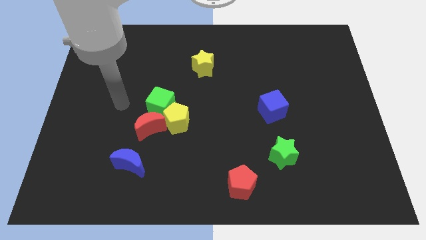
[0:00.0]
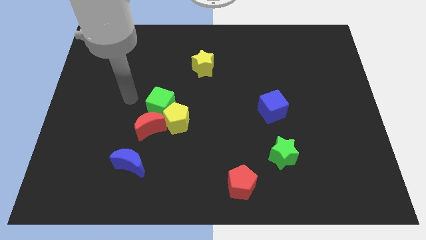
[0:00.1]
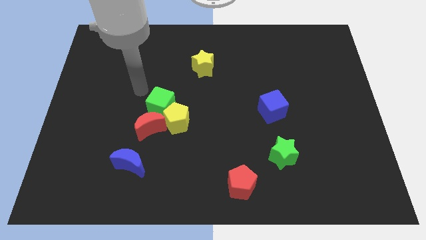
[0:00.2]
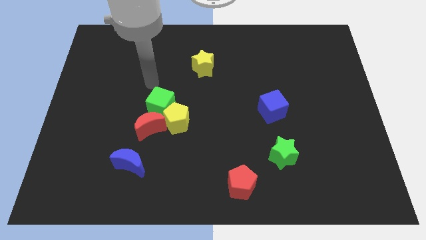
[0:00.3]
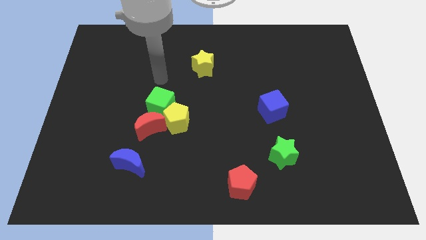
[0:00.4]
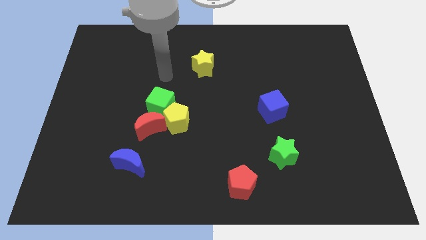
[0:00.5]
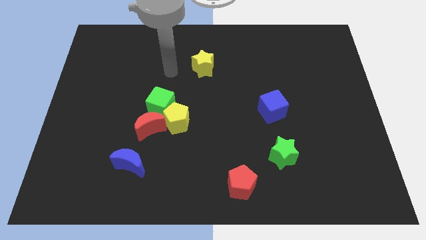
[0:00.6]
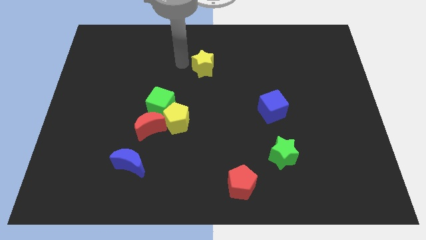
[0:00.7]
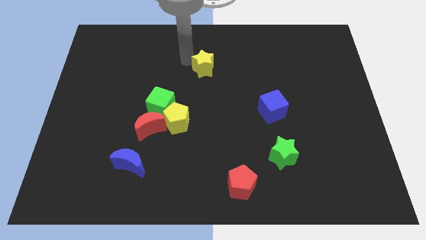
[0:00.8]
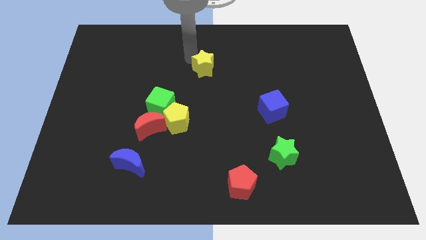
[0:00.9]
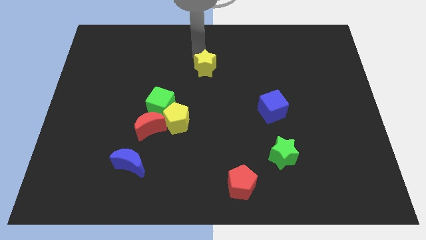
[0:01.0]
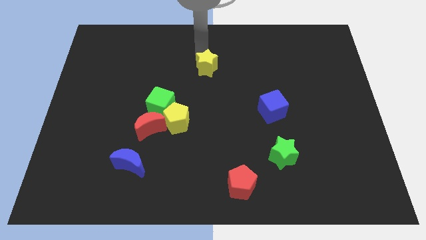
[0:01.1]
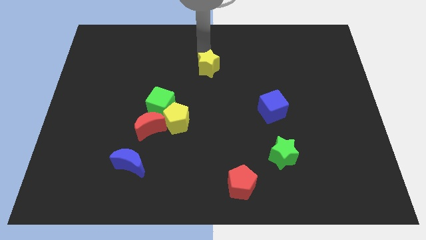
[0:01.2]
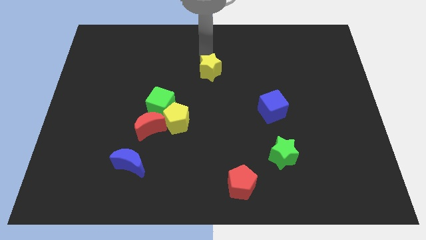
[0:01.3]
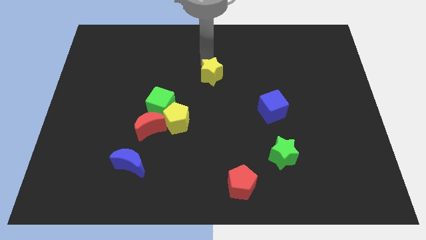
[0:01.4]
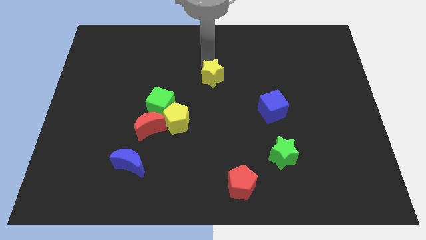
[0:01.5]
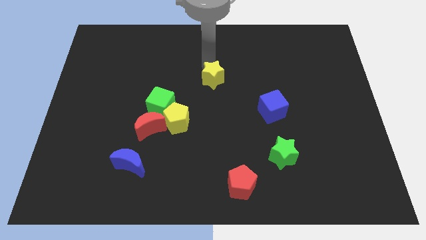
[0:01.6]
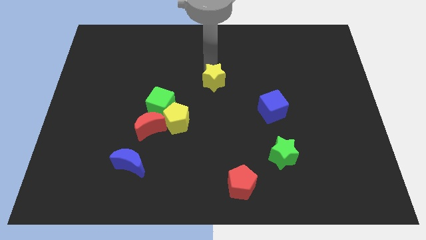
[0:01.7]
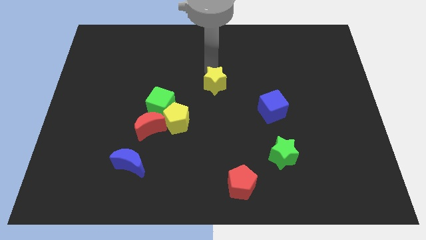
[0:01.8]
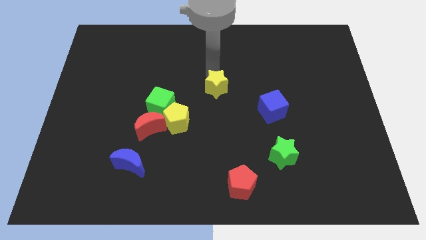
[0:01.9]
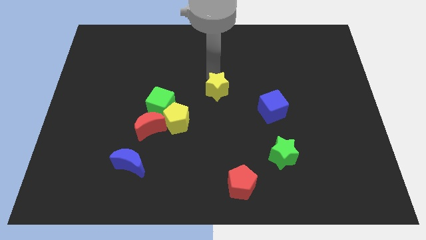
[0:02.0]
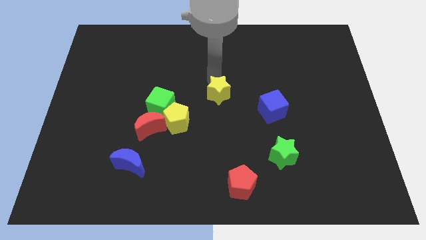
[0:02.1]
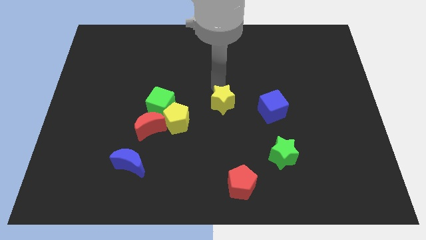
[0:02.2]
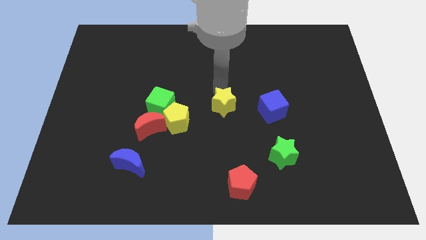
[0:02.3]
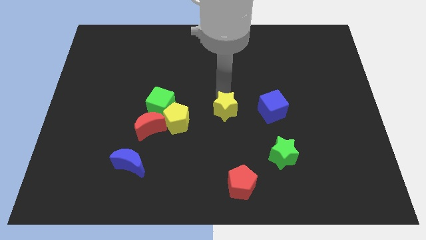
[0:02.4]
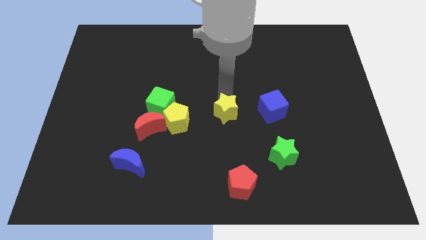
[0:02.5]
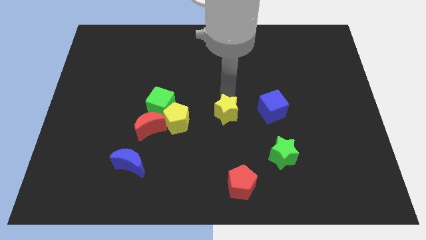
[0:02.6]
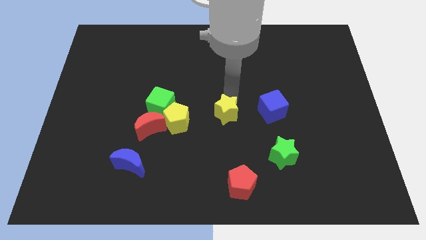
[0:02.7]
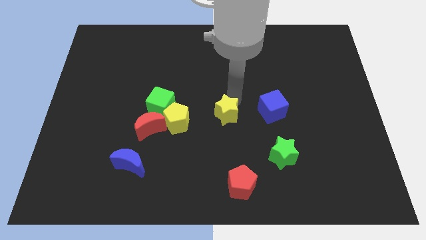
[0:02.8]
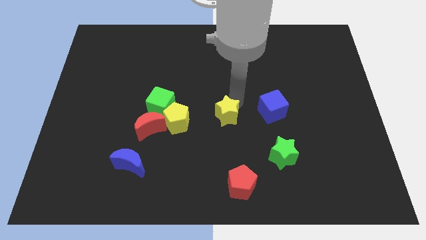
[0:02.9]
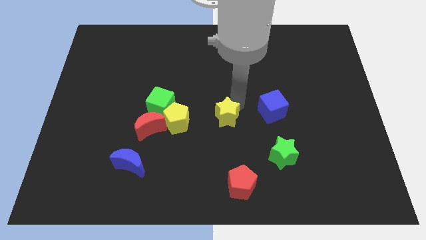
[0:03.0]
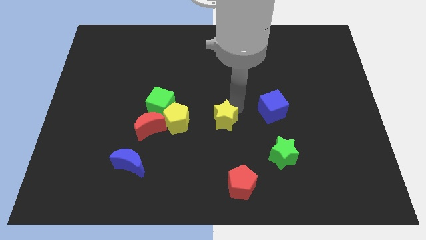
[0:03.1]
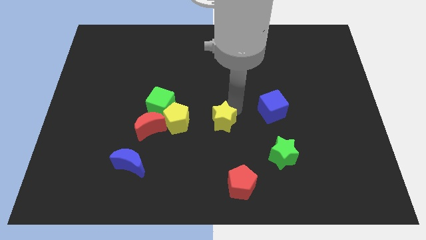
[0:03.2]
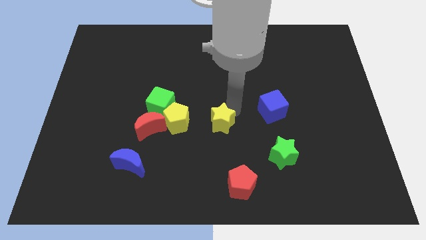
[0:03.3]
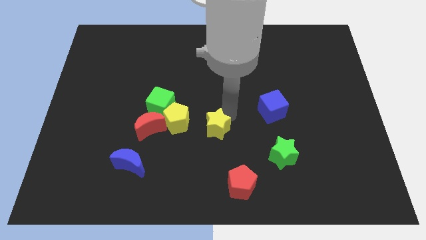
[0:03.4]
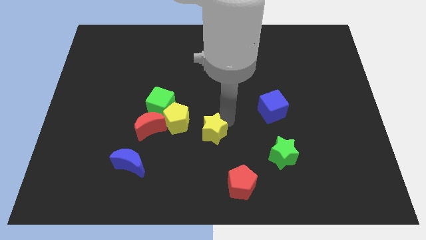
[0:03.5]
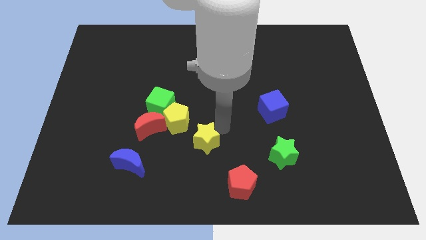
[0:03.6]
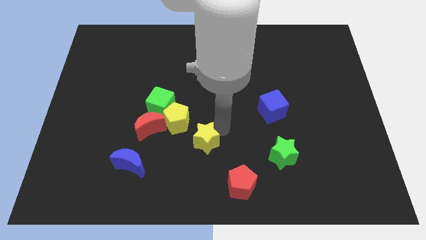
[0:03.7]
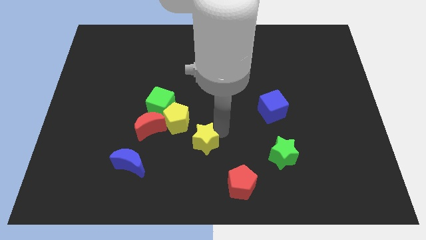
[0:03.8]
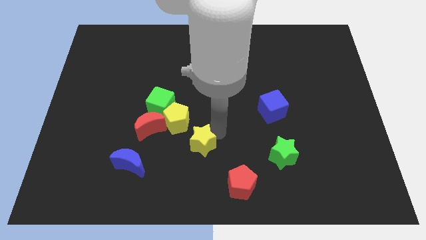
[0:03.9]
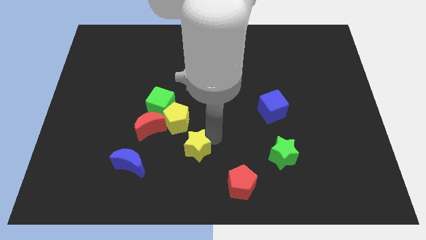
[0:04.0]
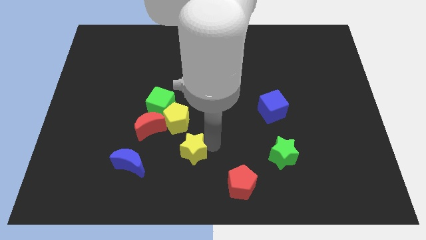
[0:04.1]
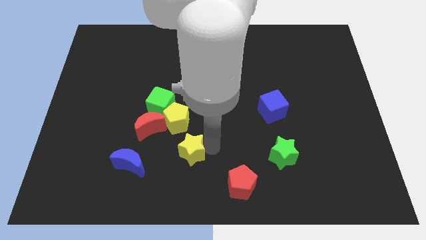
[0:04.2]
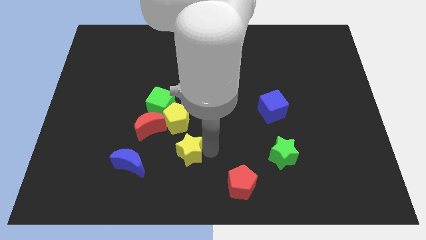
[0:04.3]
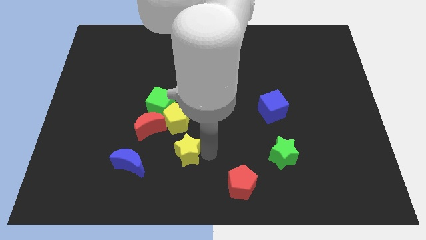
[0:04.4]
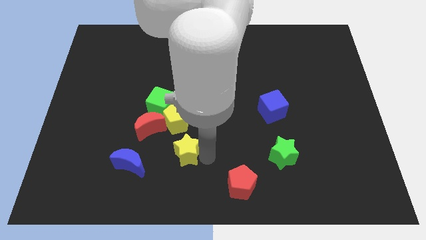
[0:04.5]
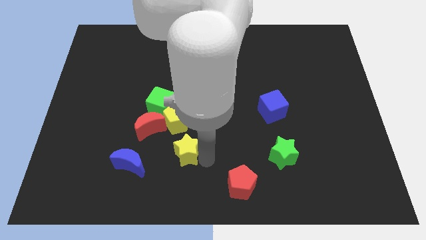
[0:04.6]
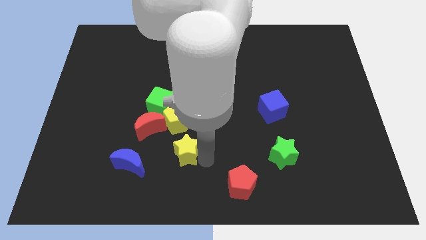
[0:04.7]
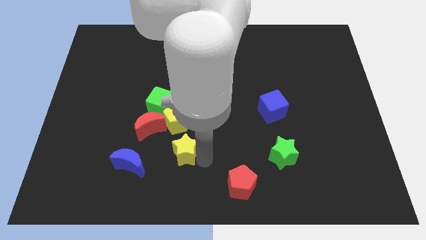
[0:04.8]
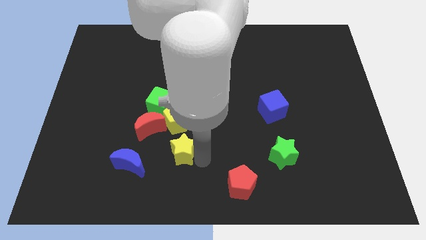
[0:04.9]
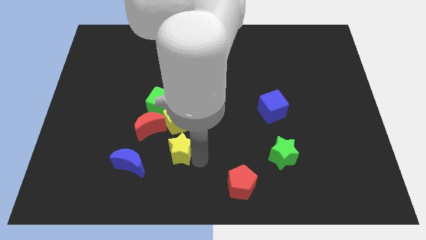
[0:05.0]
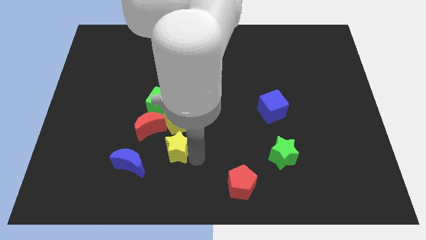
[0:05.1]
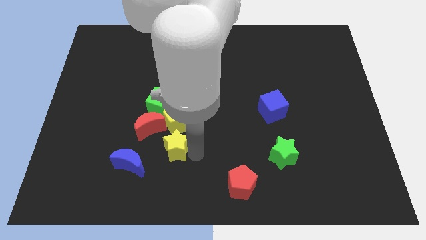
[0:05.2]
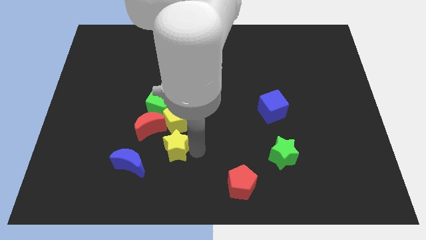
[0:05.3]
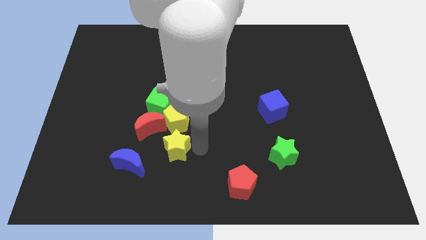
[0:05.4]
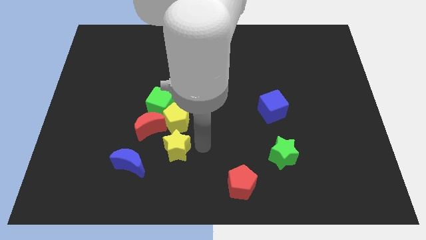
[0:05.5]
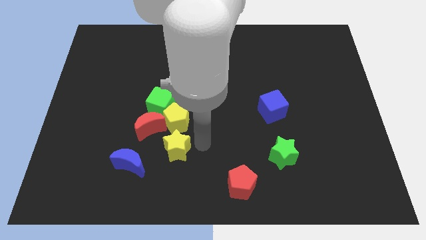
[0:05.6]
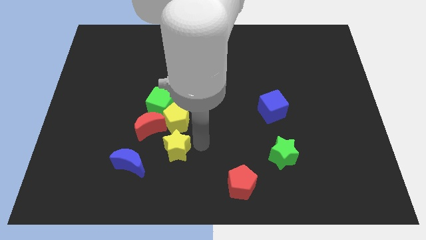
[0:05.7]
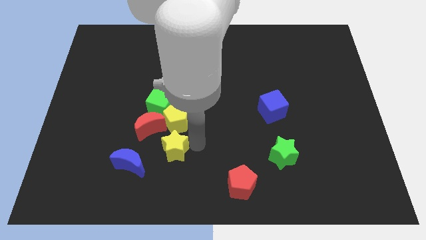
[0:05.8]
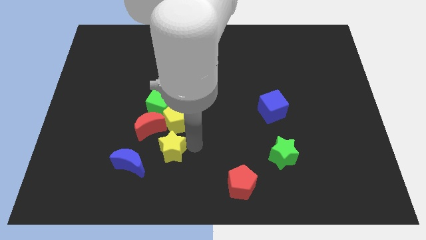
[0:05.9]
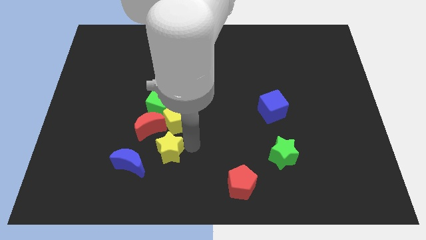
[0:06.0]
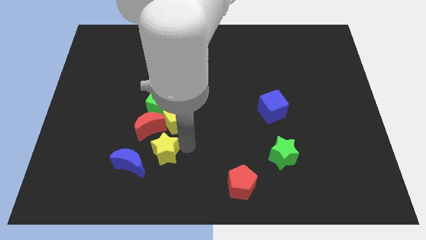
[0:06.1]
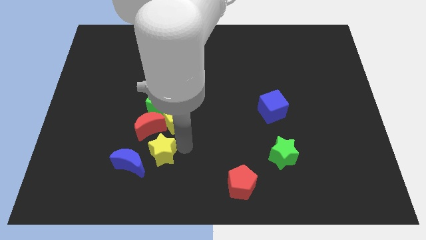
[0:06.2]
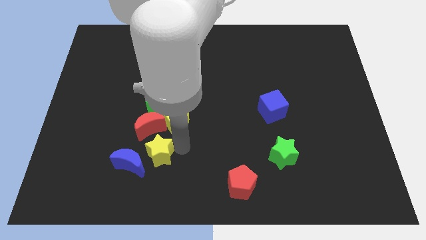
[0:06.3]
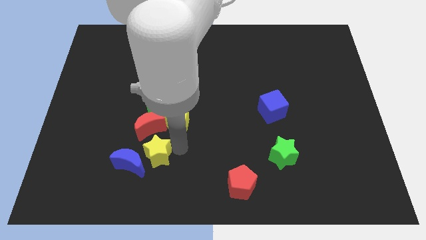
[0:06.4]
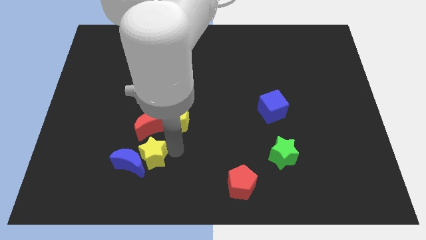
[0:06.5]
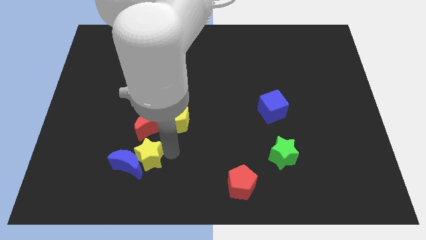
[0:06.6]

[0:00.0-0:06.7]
slide the yellow star close to the blue moon

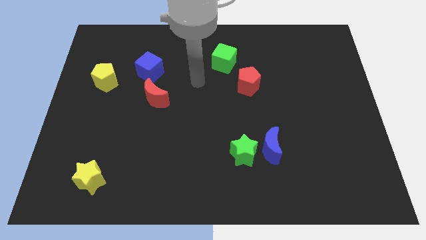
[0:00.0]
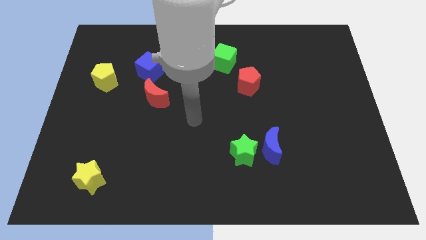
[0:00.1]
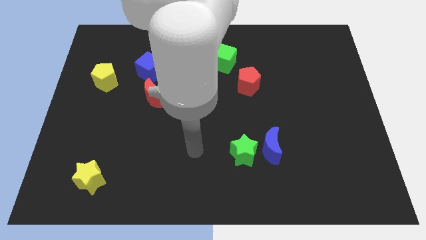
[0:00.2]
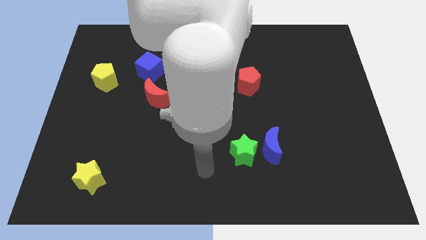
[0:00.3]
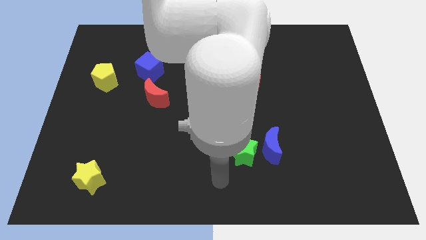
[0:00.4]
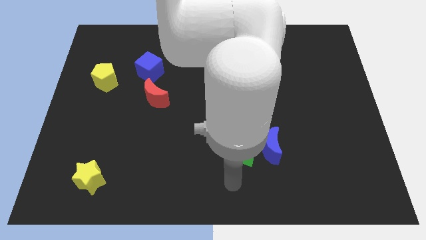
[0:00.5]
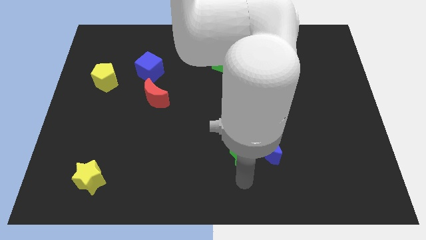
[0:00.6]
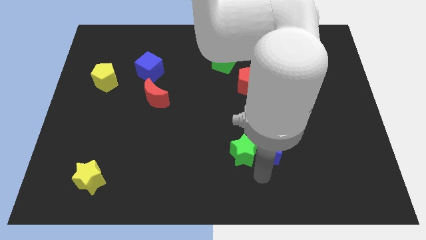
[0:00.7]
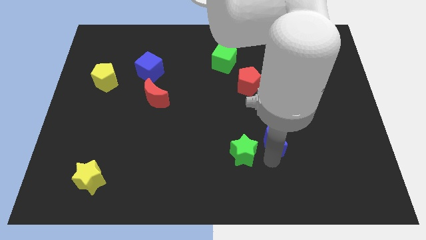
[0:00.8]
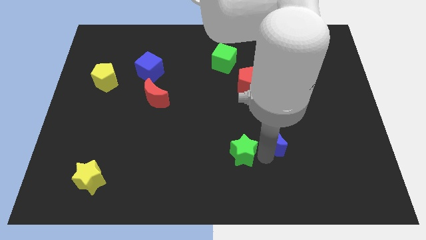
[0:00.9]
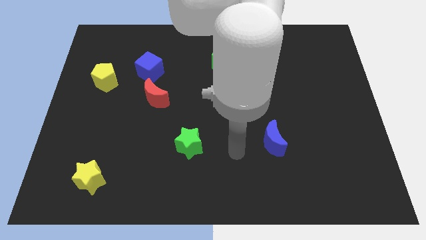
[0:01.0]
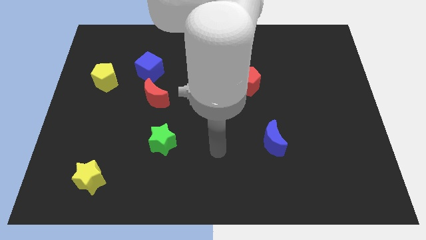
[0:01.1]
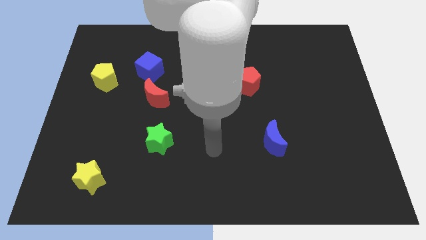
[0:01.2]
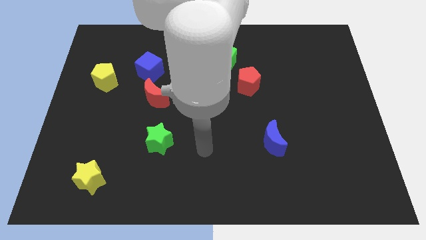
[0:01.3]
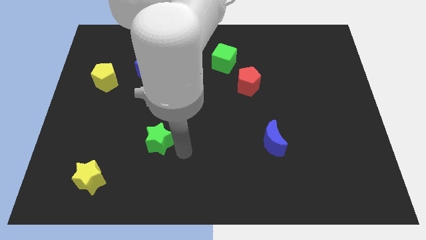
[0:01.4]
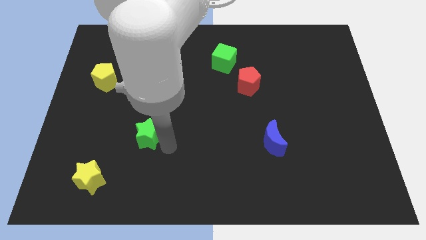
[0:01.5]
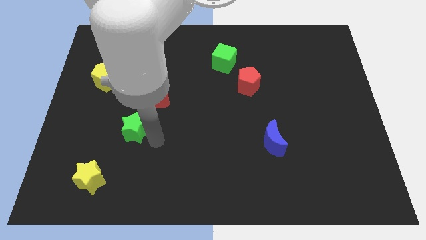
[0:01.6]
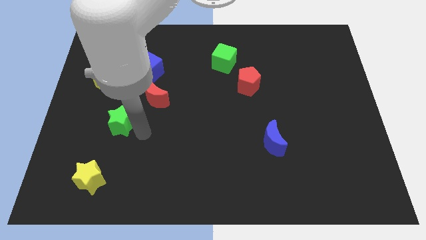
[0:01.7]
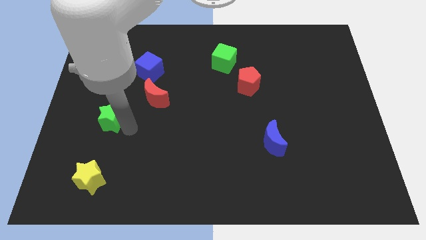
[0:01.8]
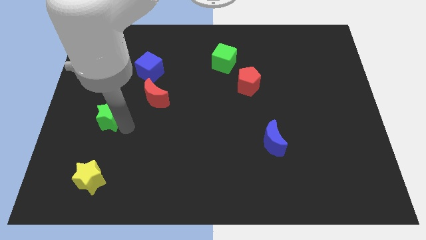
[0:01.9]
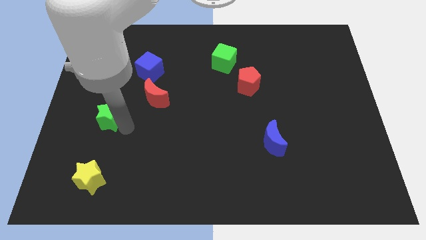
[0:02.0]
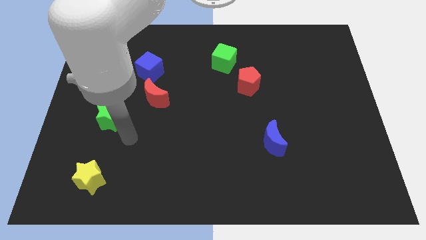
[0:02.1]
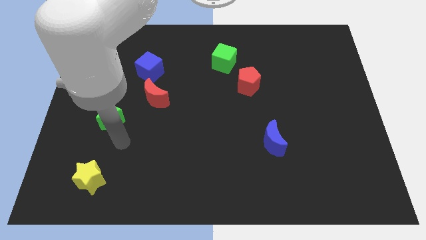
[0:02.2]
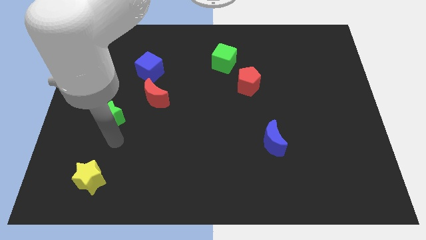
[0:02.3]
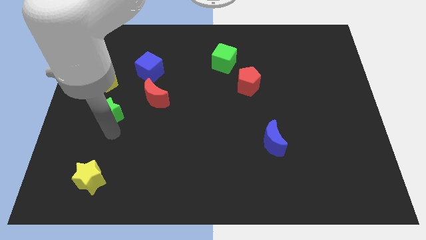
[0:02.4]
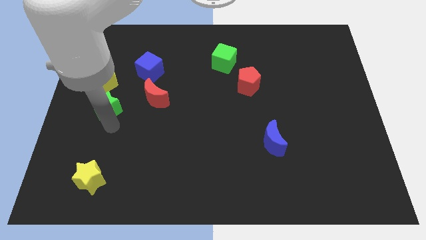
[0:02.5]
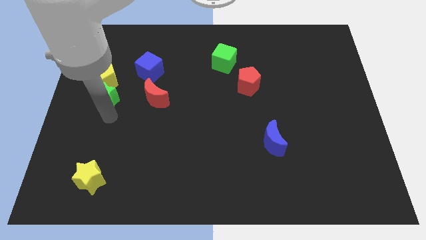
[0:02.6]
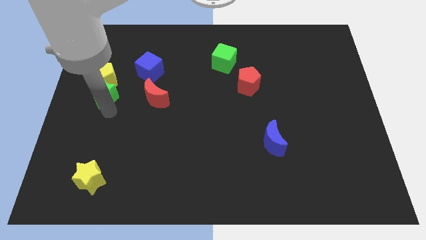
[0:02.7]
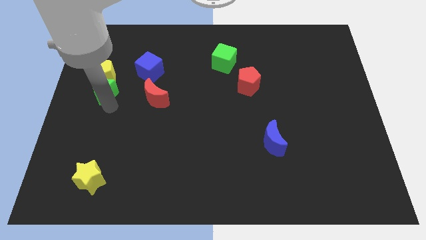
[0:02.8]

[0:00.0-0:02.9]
slide the green star next to the yellow pentagon
